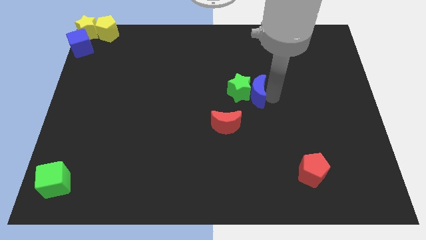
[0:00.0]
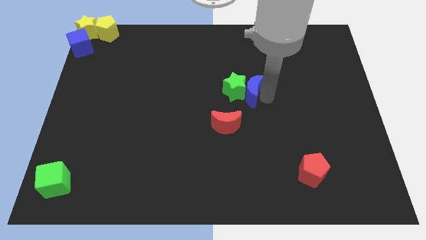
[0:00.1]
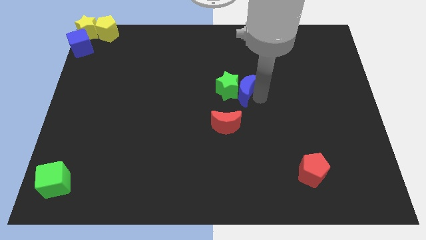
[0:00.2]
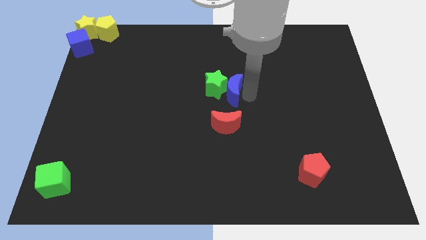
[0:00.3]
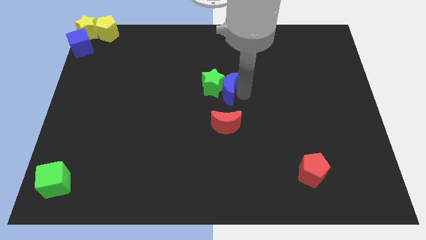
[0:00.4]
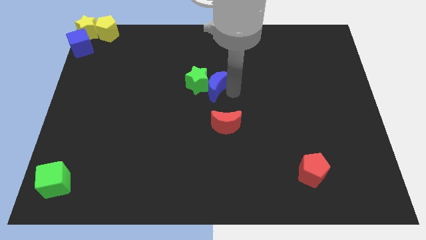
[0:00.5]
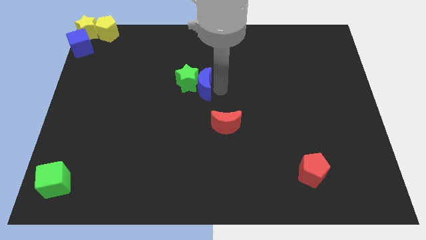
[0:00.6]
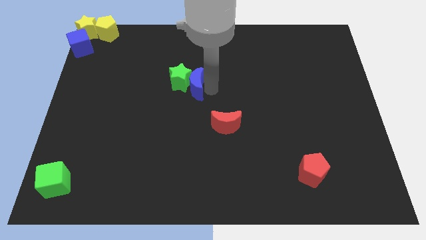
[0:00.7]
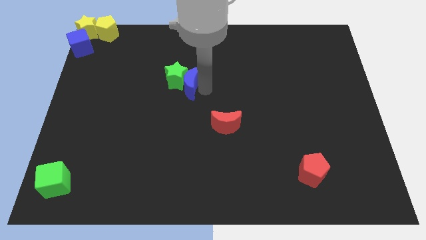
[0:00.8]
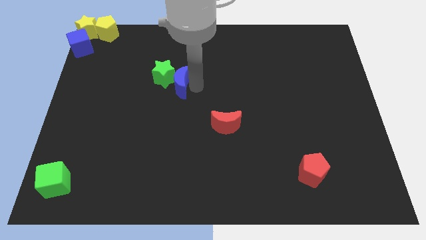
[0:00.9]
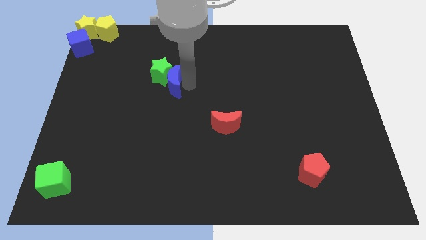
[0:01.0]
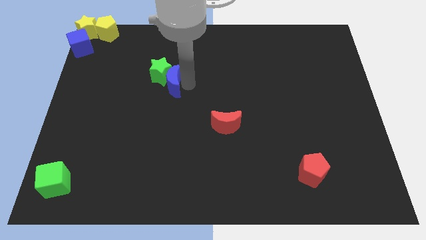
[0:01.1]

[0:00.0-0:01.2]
push the green star with blue crescent

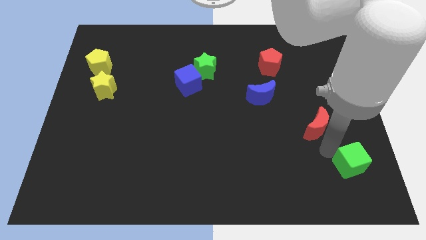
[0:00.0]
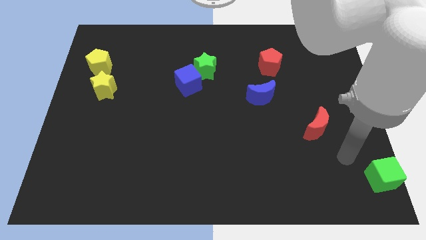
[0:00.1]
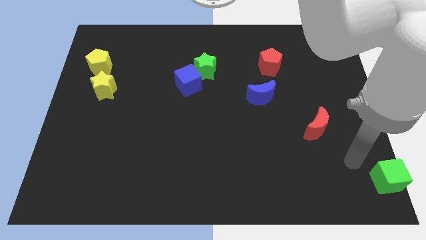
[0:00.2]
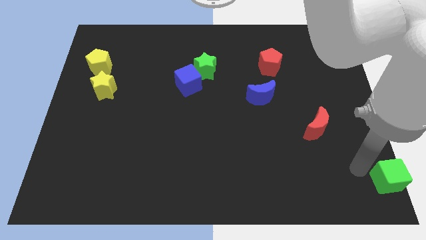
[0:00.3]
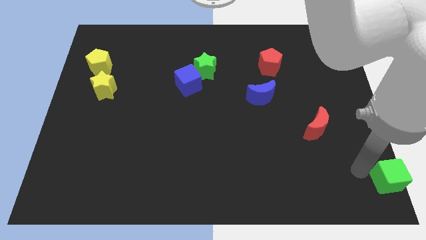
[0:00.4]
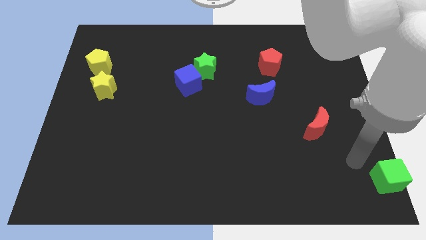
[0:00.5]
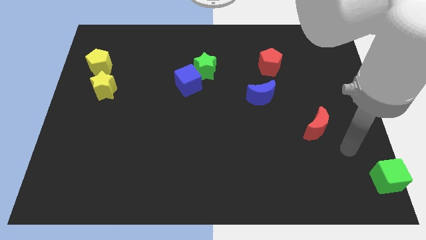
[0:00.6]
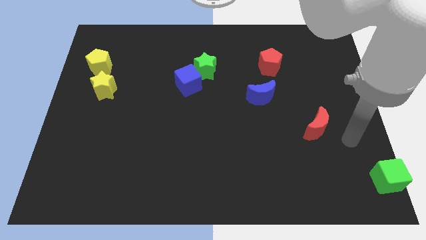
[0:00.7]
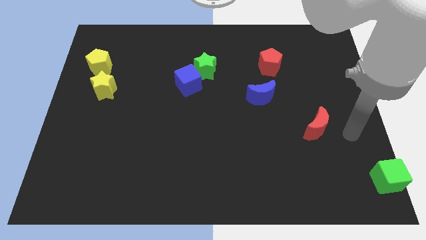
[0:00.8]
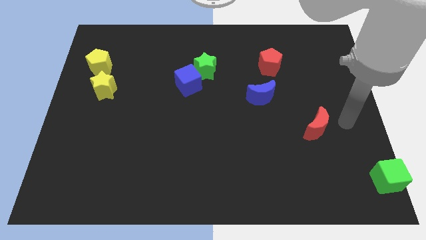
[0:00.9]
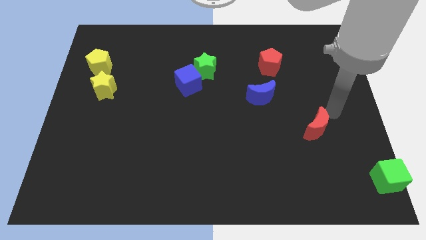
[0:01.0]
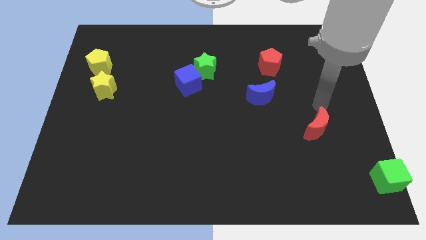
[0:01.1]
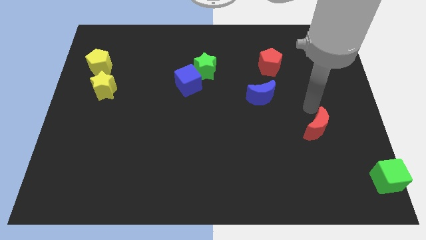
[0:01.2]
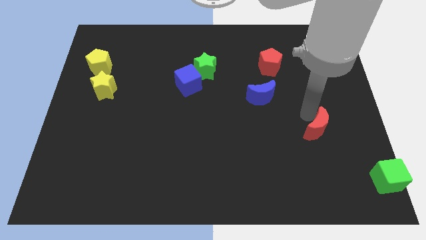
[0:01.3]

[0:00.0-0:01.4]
push the green cube to the bottom right of the board

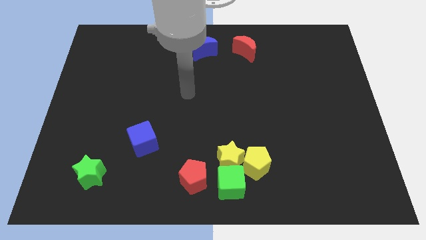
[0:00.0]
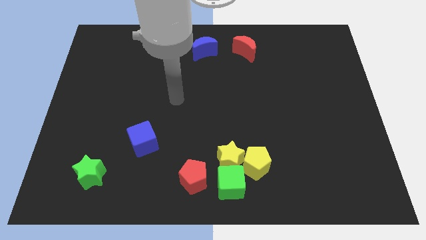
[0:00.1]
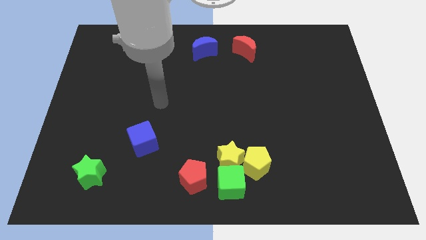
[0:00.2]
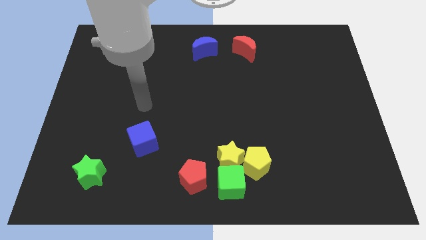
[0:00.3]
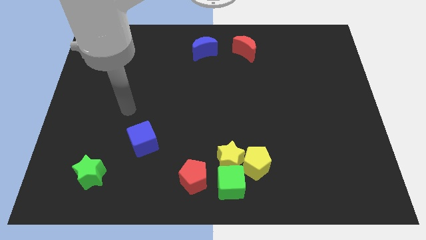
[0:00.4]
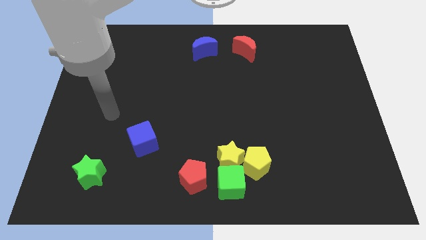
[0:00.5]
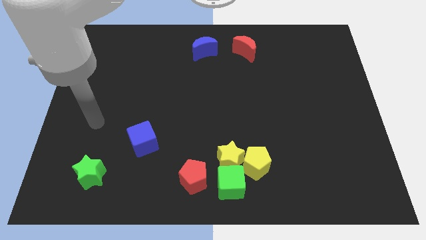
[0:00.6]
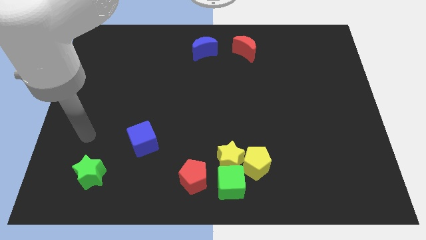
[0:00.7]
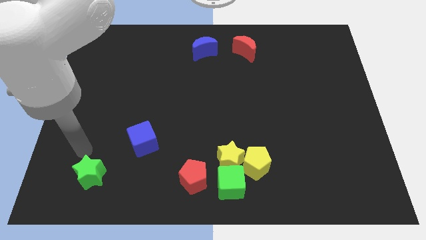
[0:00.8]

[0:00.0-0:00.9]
put your arm at the top of green star

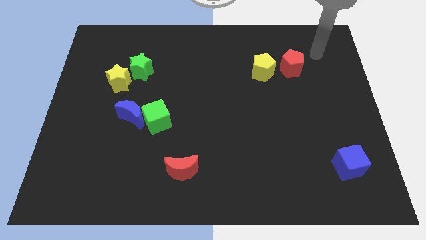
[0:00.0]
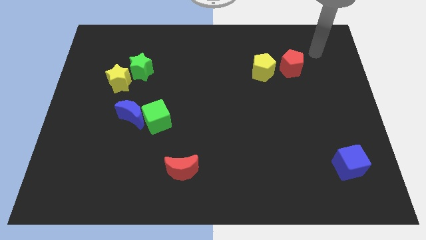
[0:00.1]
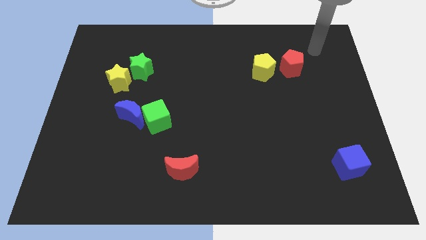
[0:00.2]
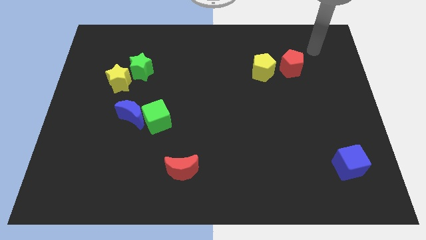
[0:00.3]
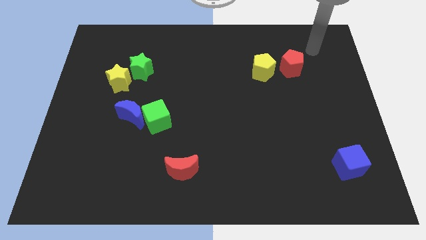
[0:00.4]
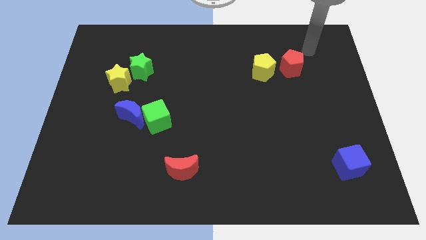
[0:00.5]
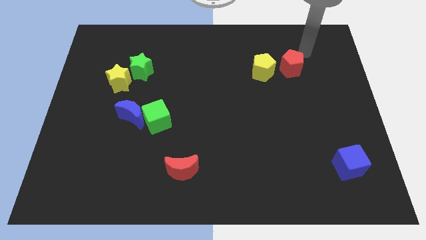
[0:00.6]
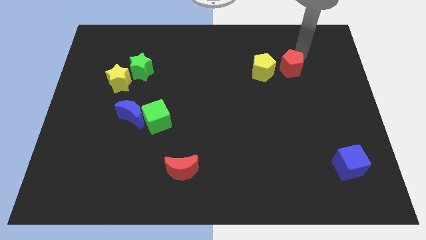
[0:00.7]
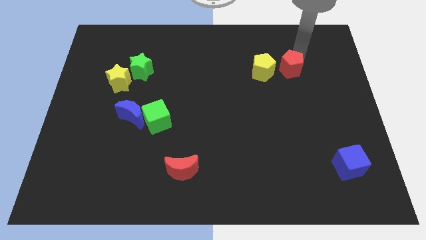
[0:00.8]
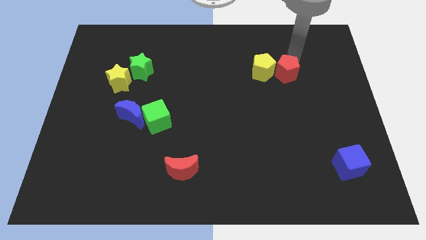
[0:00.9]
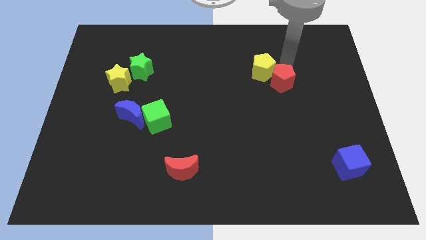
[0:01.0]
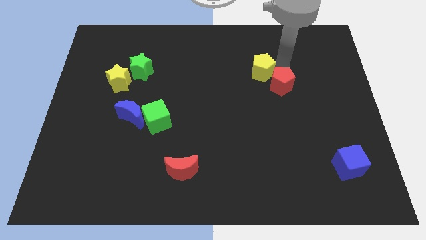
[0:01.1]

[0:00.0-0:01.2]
move the red pentagon close to the bottom right of the yellow pentagon

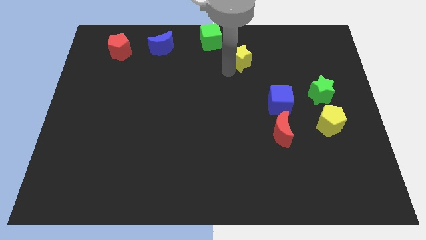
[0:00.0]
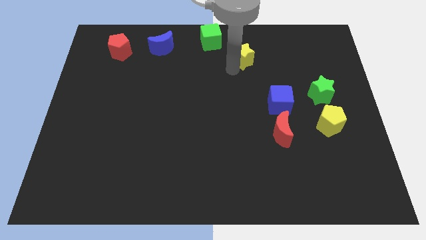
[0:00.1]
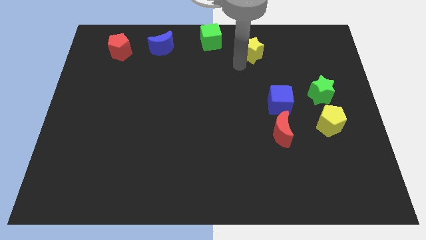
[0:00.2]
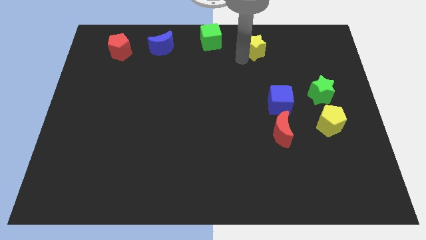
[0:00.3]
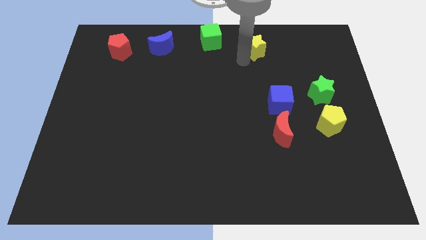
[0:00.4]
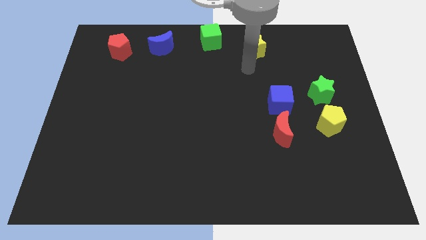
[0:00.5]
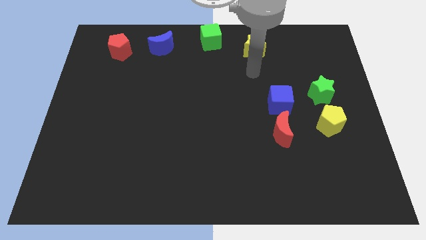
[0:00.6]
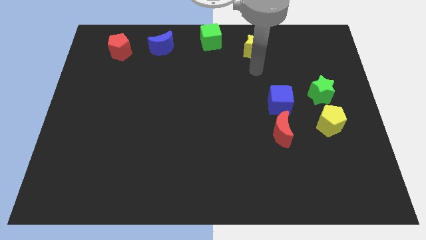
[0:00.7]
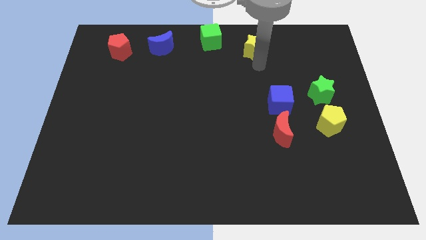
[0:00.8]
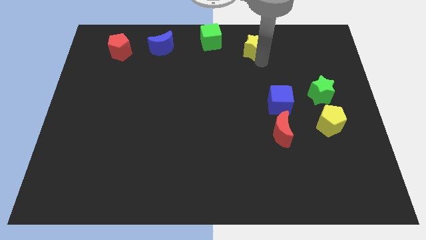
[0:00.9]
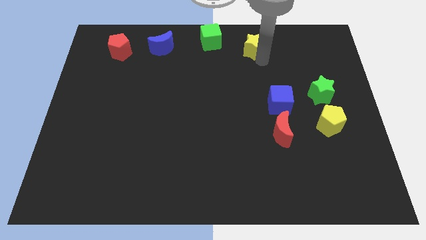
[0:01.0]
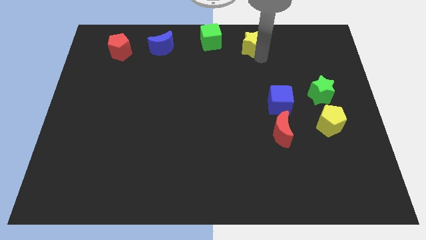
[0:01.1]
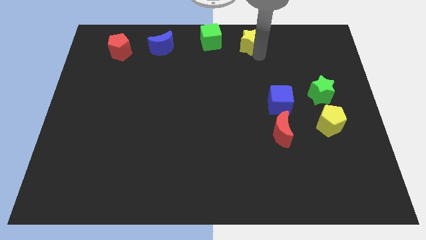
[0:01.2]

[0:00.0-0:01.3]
move the yellow star to the right of the green cube

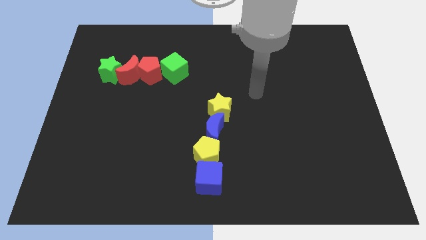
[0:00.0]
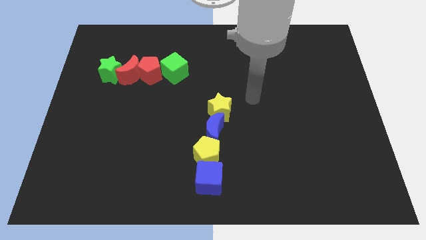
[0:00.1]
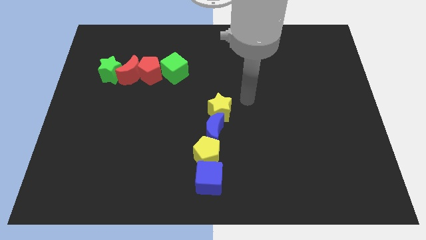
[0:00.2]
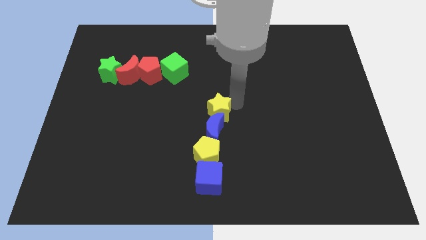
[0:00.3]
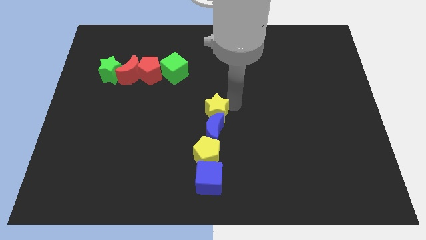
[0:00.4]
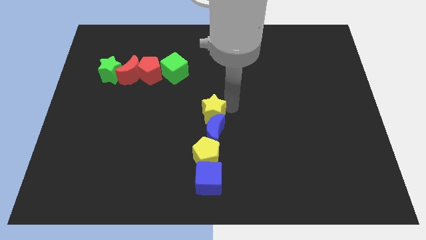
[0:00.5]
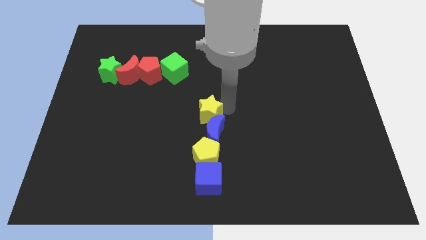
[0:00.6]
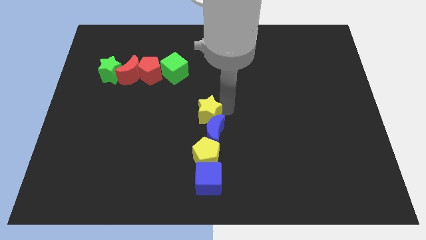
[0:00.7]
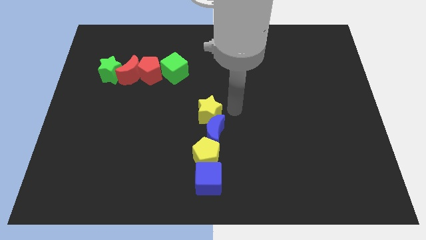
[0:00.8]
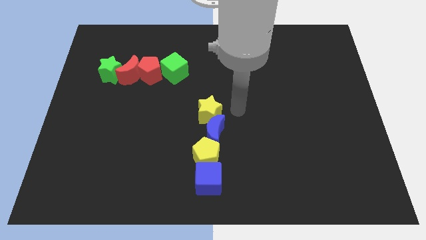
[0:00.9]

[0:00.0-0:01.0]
move the yellow star slightly to the left

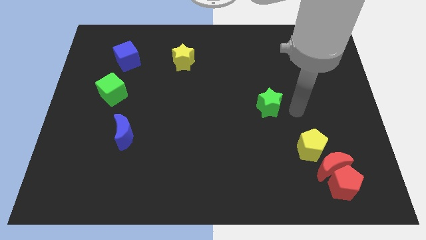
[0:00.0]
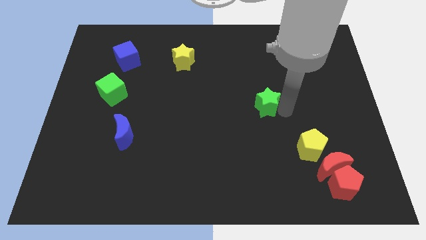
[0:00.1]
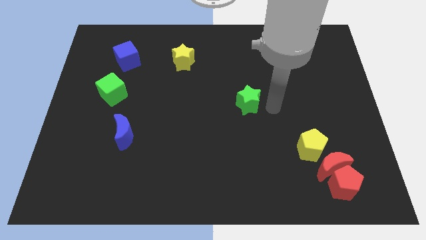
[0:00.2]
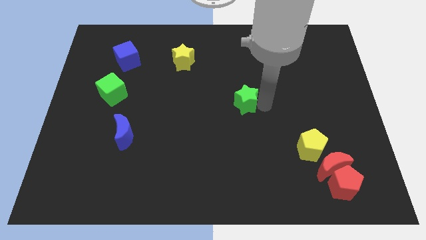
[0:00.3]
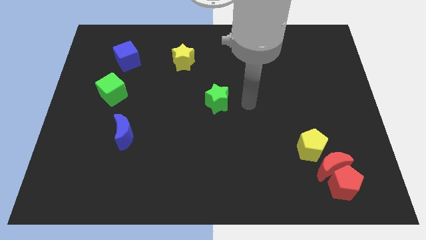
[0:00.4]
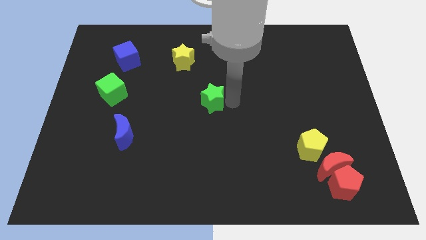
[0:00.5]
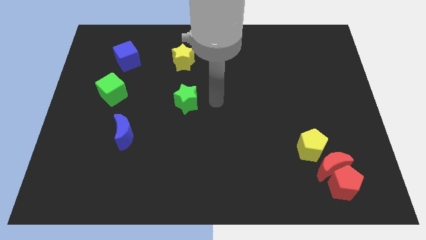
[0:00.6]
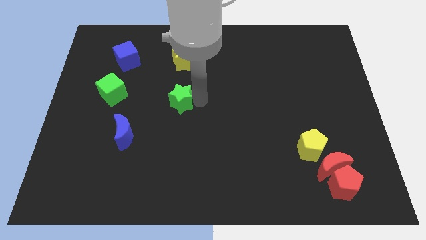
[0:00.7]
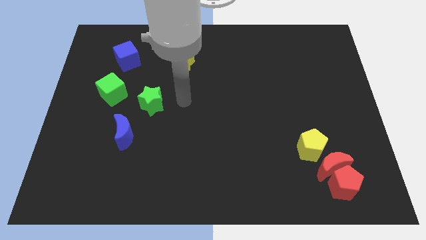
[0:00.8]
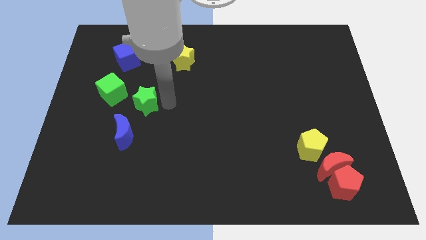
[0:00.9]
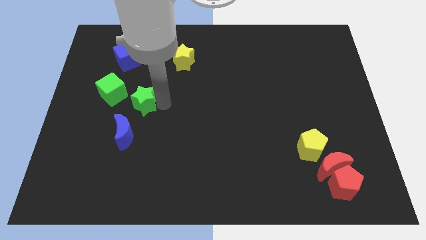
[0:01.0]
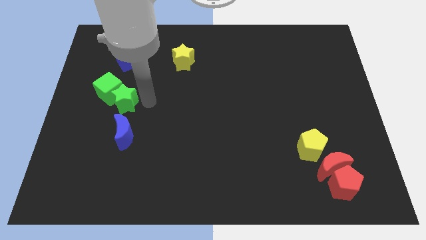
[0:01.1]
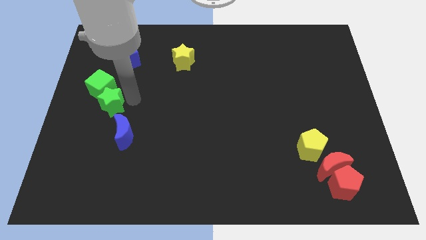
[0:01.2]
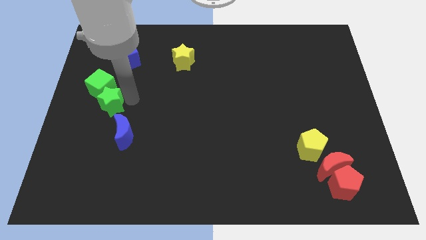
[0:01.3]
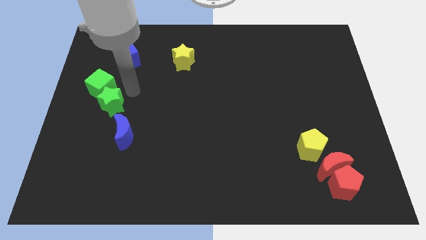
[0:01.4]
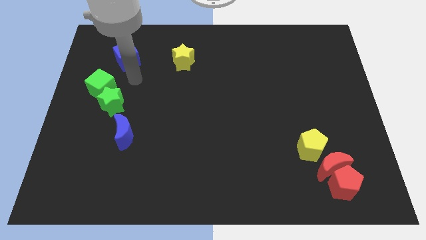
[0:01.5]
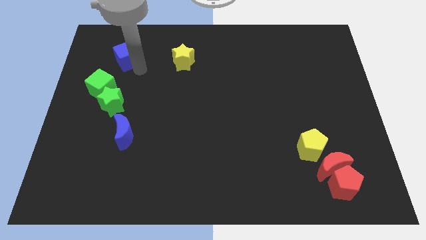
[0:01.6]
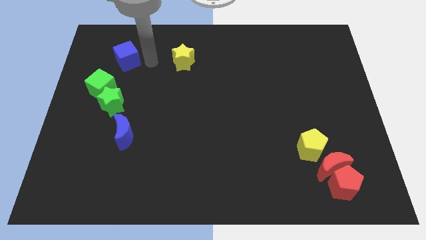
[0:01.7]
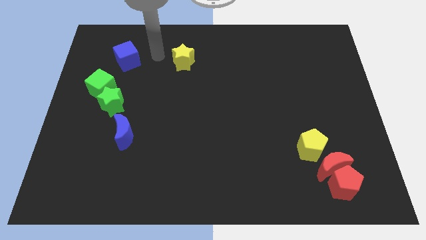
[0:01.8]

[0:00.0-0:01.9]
move the green star into the green cube
